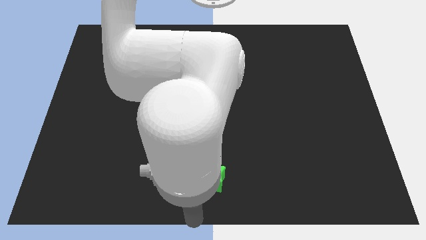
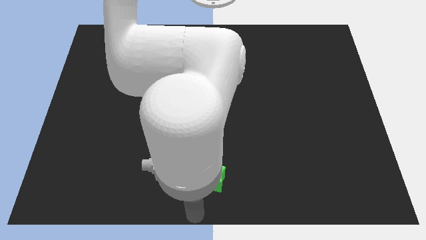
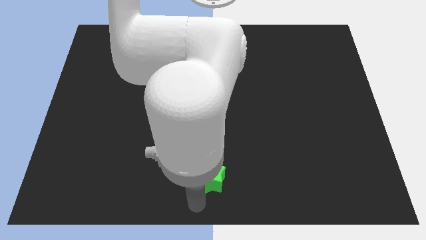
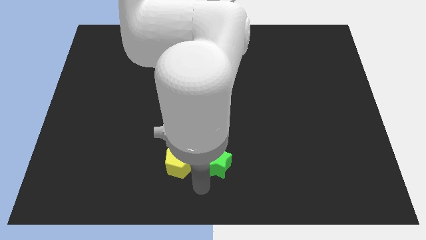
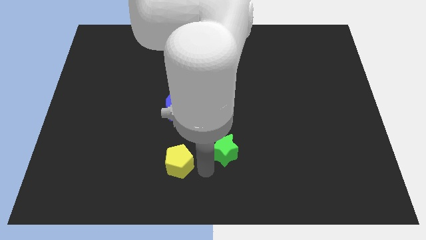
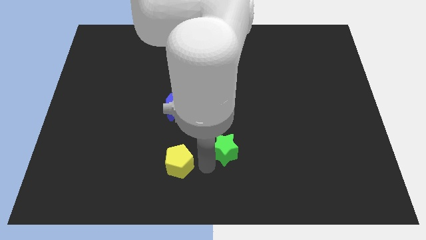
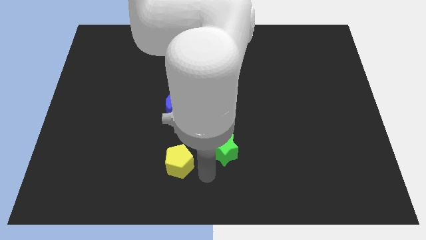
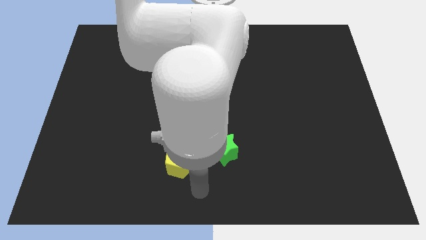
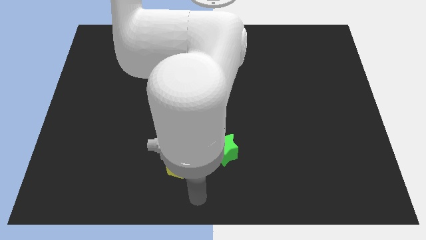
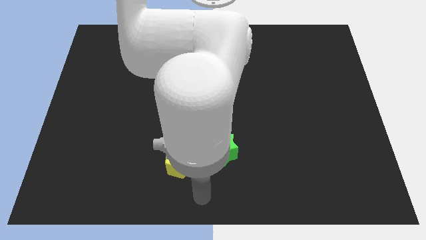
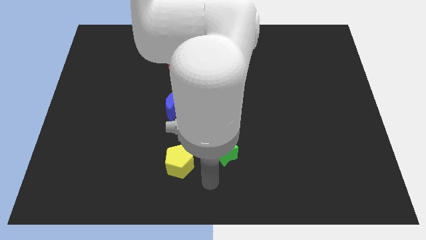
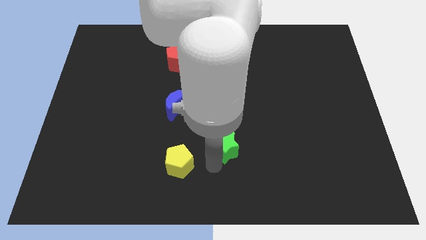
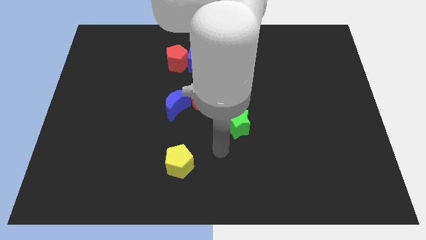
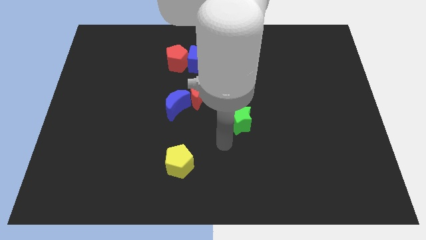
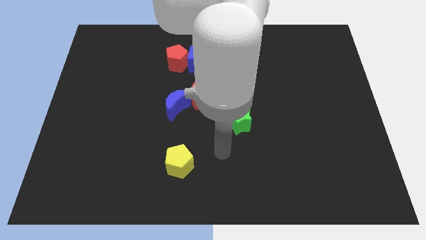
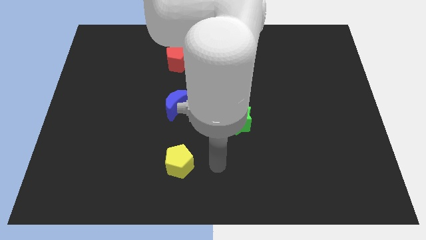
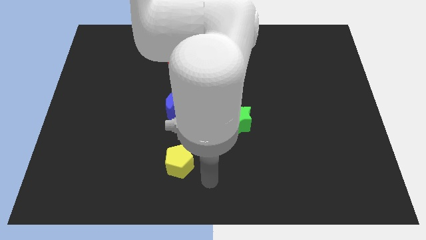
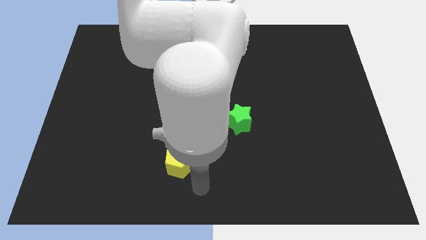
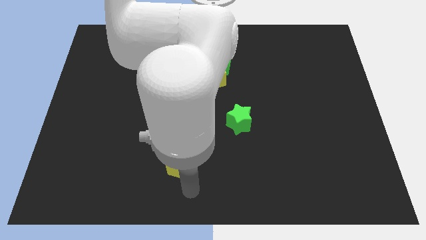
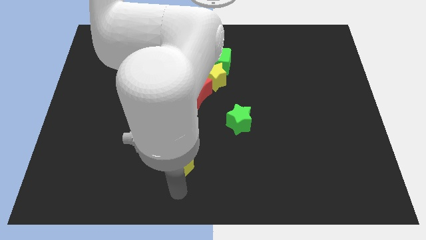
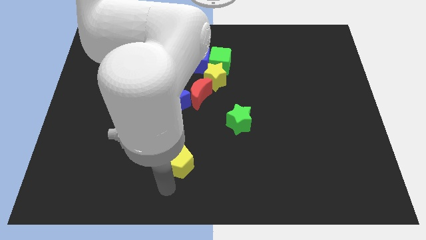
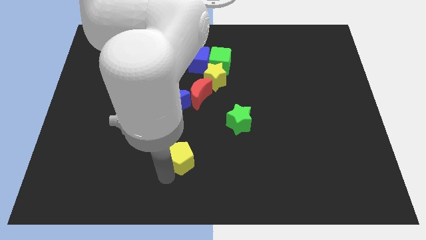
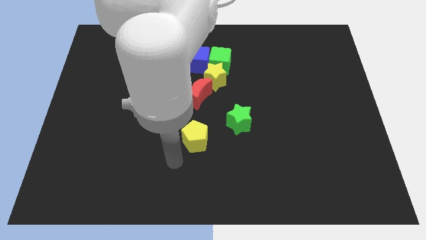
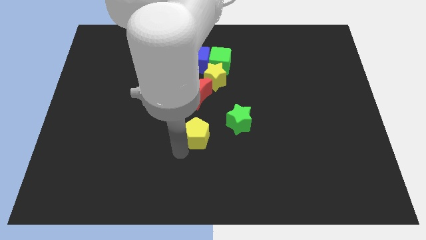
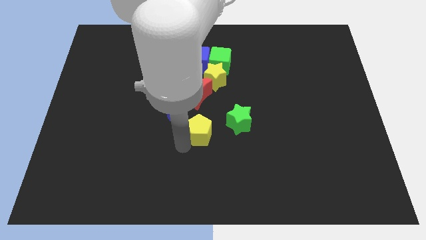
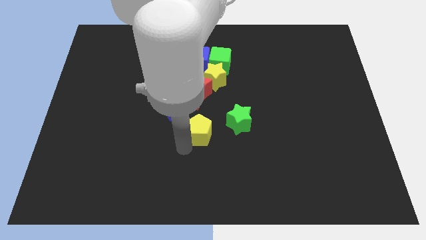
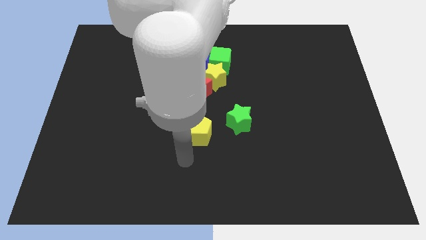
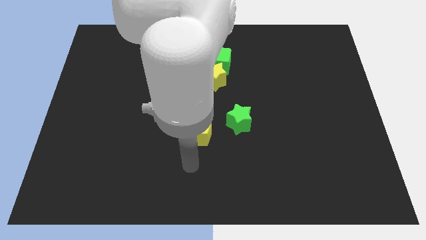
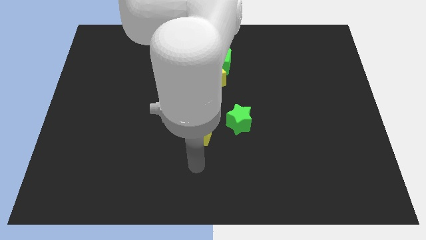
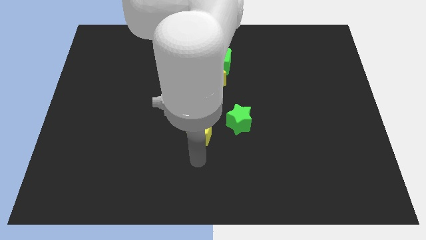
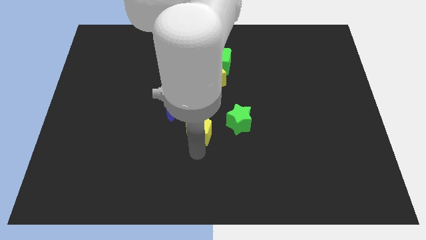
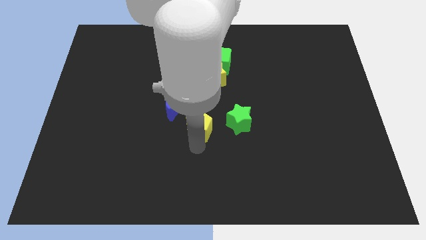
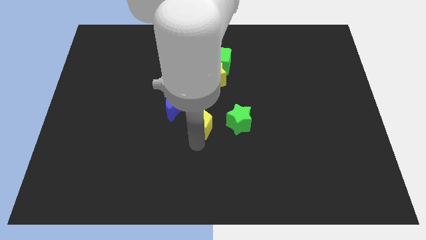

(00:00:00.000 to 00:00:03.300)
push the green star and yellow pentagon towards the center of the board

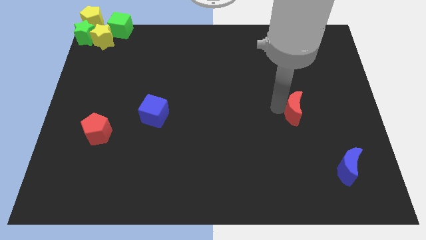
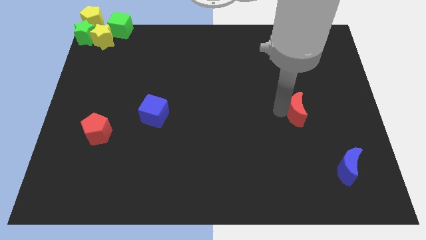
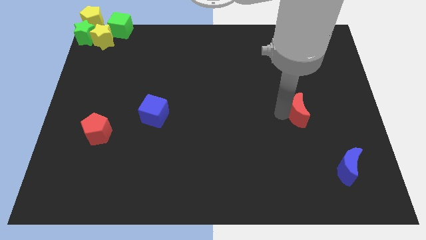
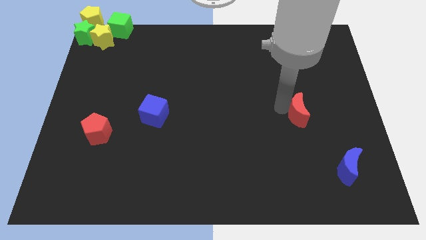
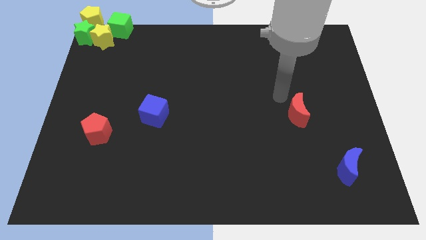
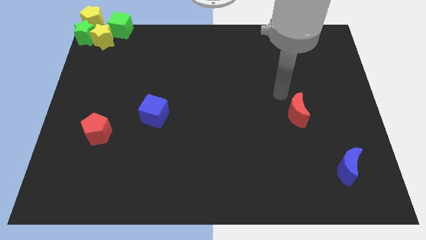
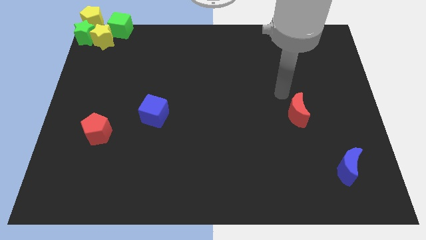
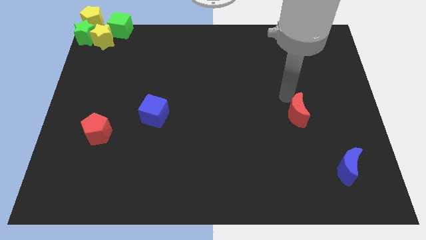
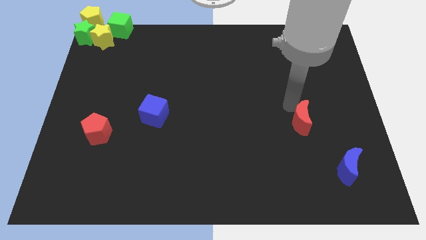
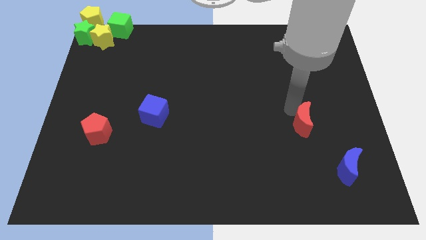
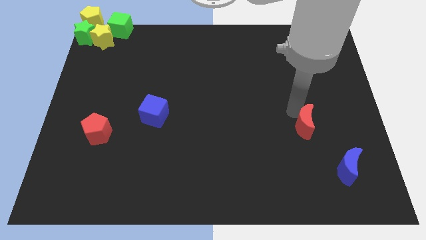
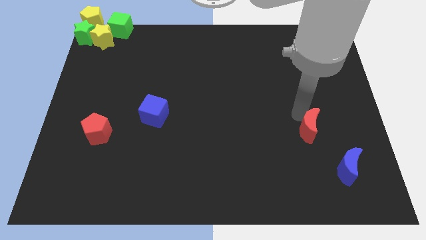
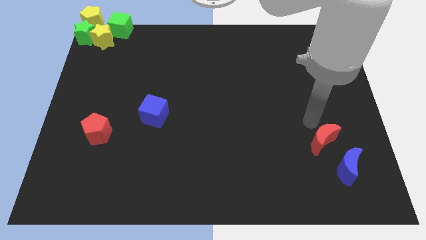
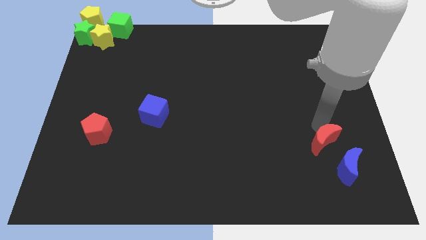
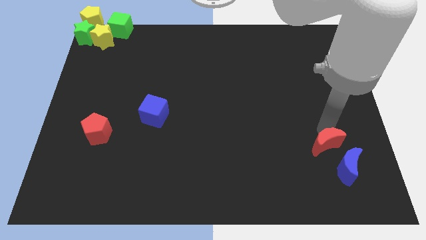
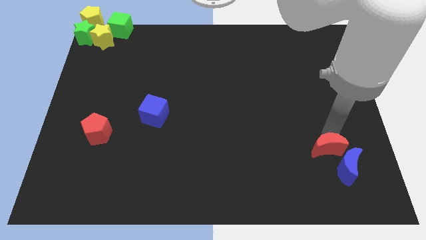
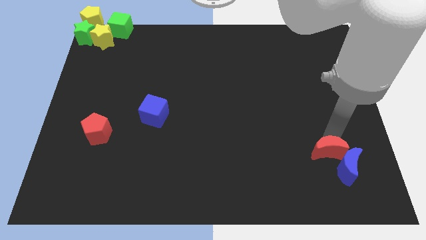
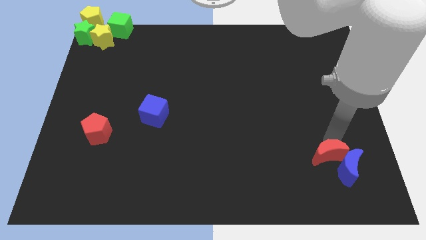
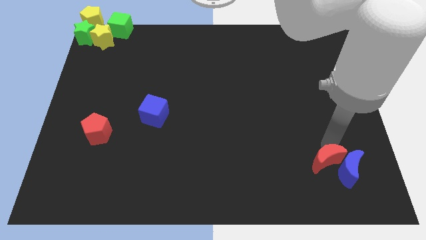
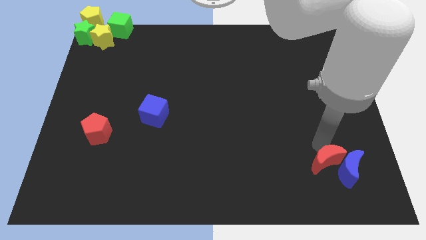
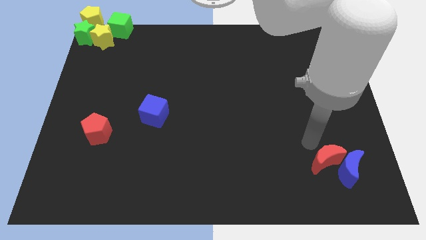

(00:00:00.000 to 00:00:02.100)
push the red crescent into blue crescent

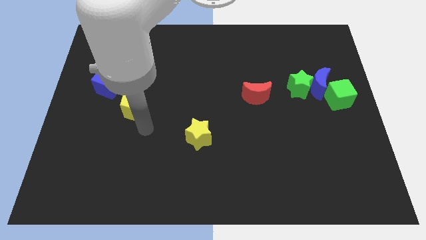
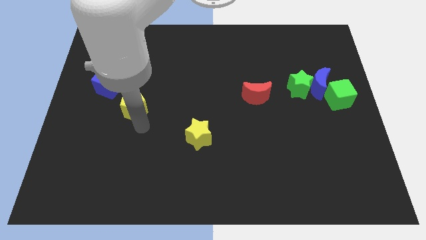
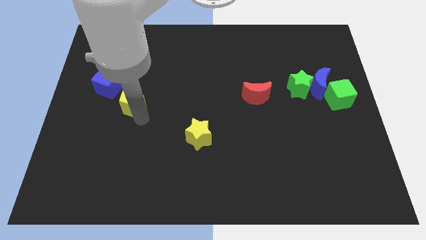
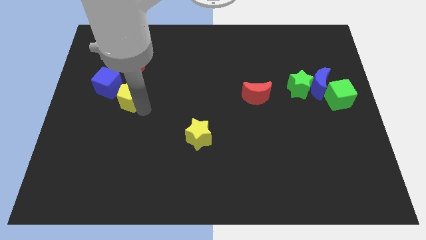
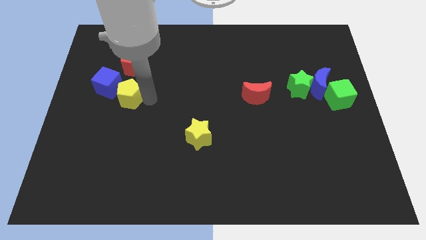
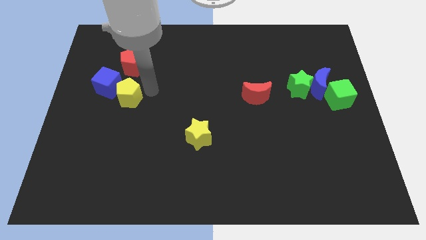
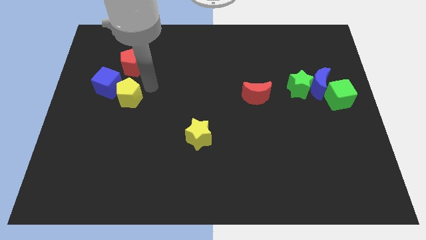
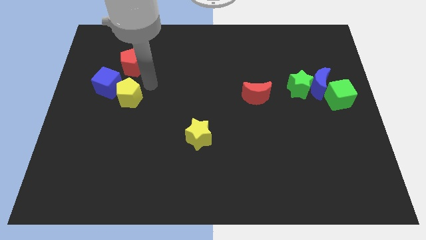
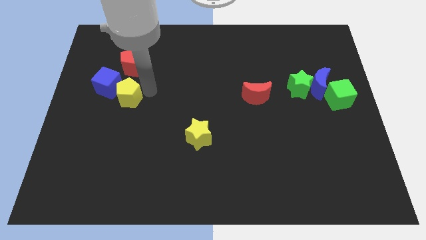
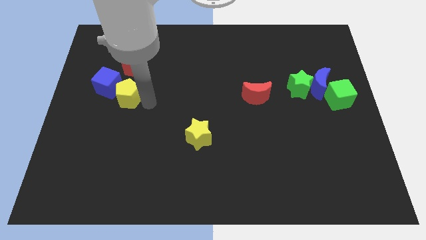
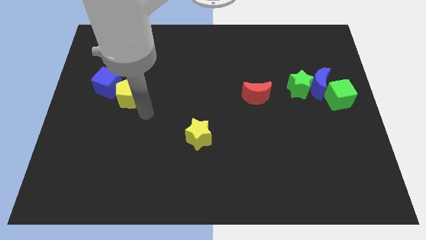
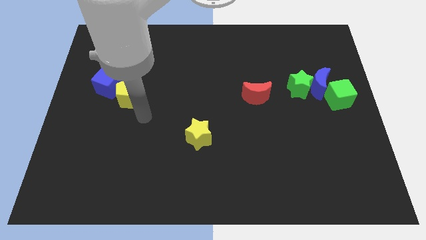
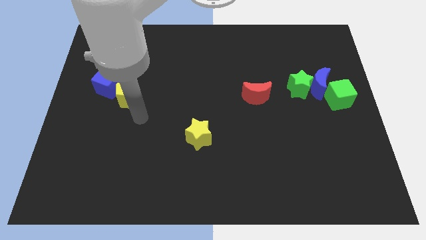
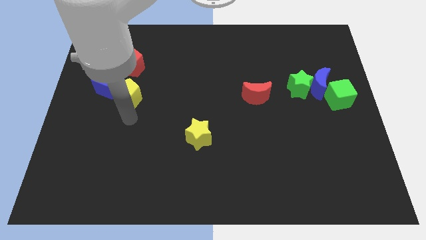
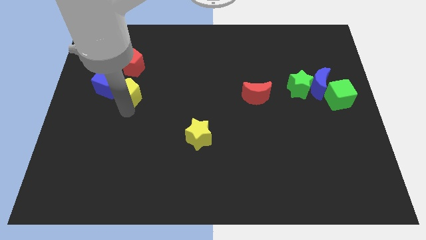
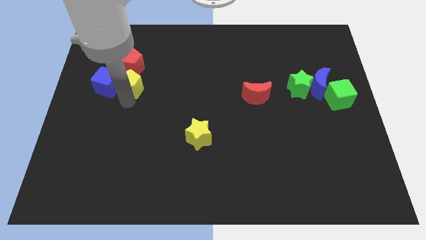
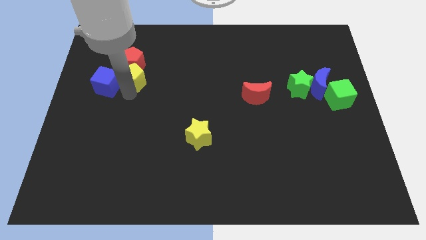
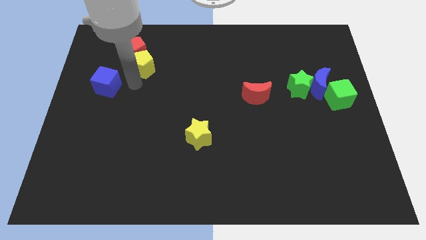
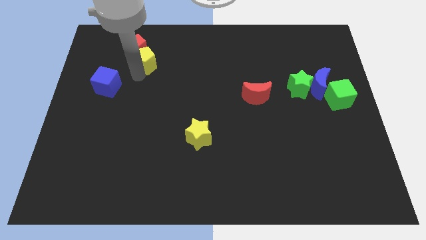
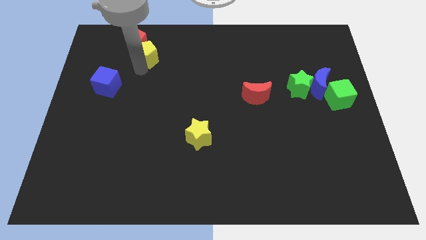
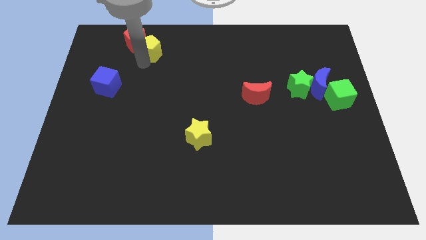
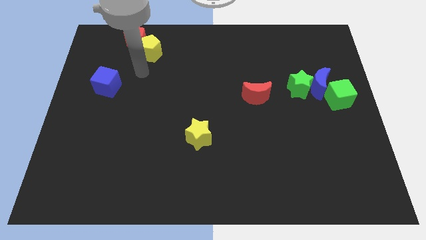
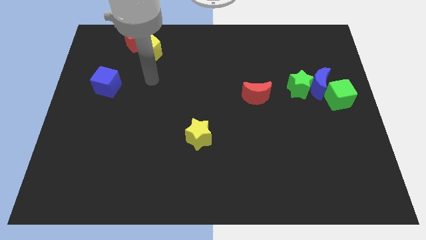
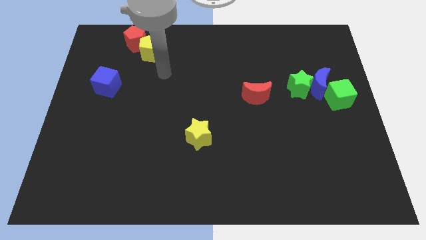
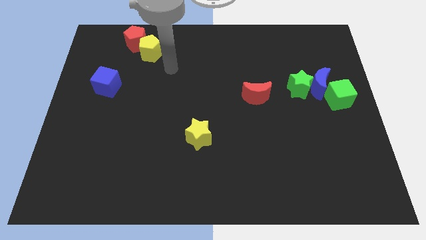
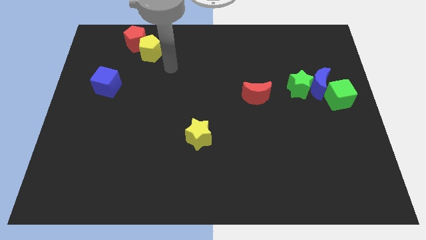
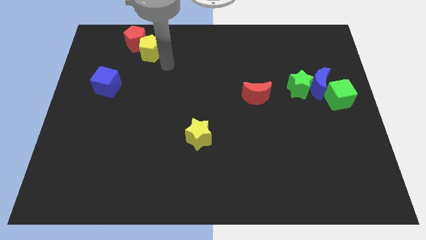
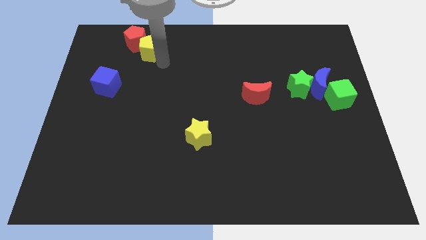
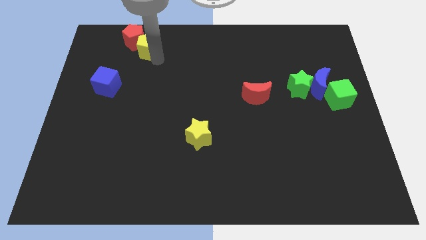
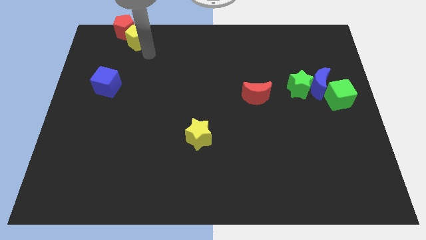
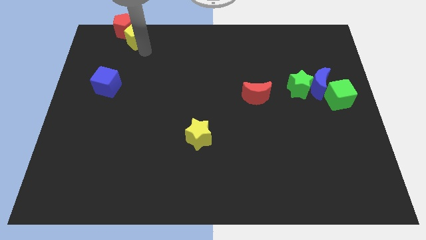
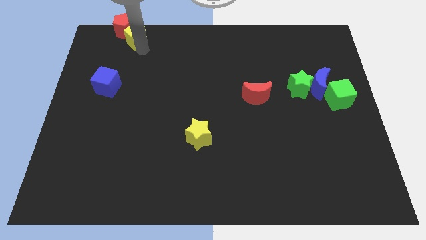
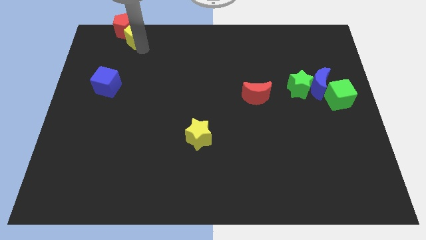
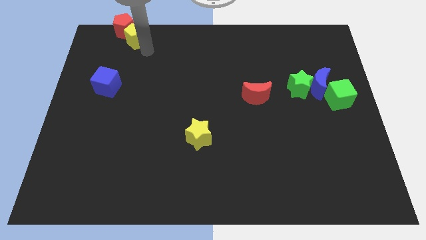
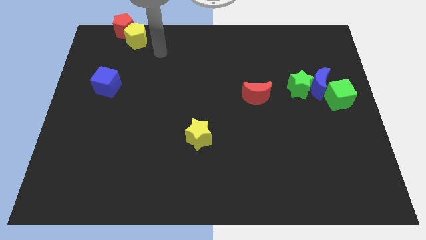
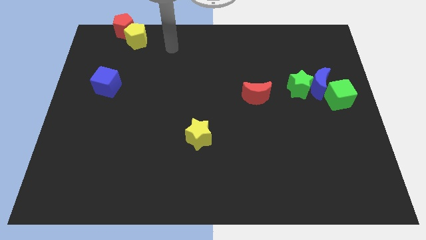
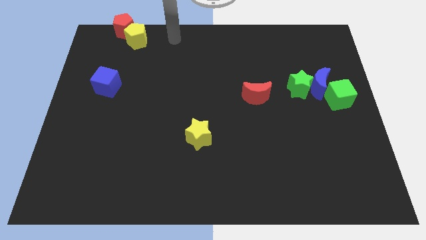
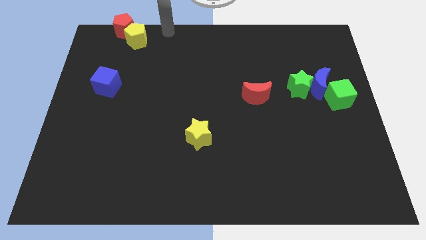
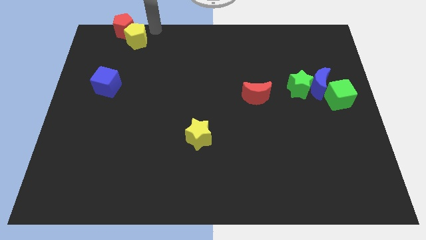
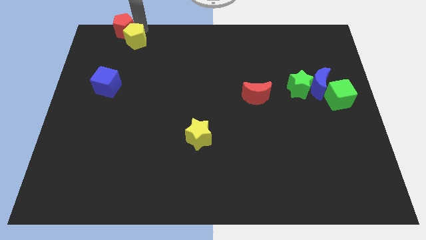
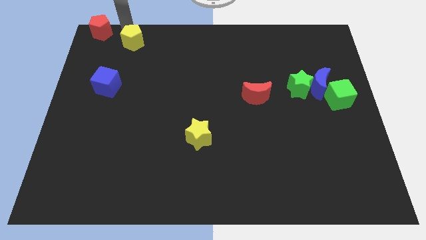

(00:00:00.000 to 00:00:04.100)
move red pentagon and yellow pentagon to top left corner
